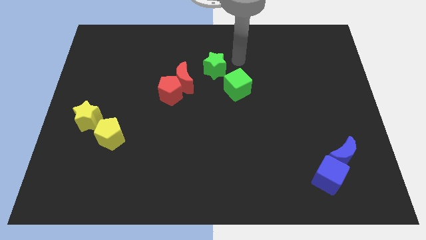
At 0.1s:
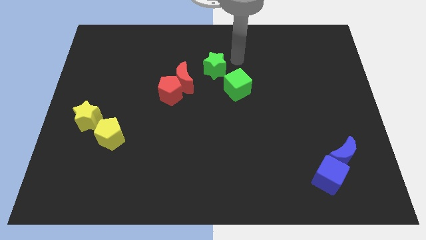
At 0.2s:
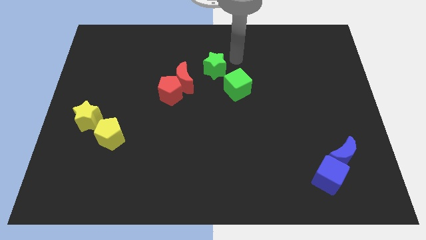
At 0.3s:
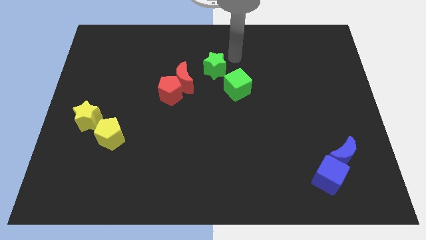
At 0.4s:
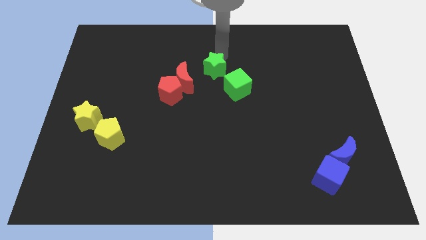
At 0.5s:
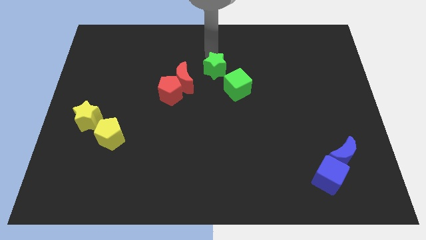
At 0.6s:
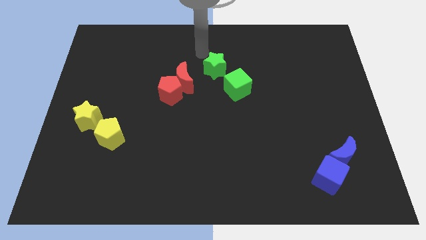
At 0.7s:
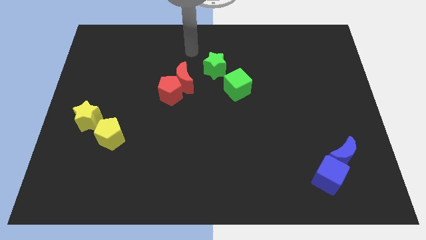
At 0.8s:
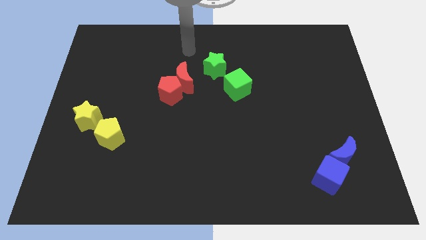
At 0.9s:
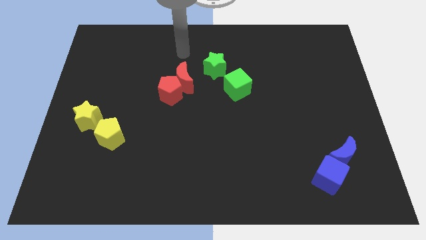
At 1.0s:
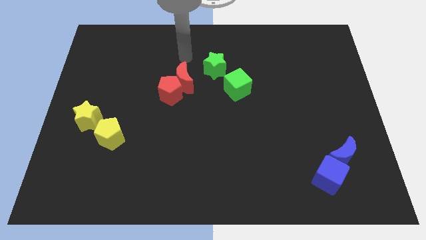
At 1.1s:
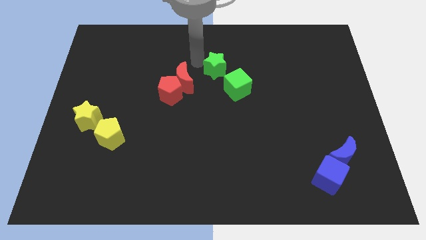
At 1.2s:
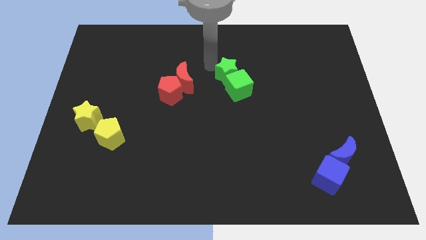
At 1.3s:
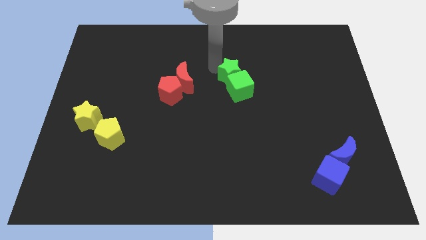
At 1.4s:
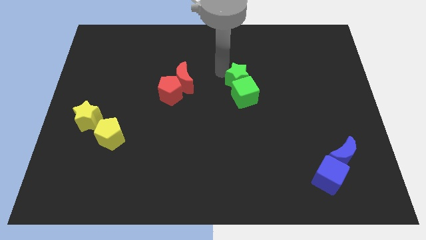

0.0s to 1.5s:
drag the green star into the top side of the green cube

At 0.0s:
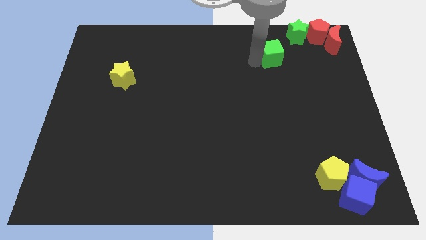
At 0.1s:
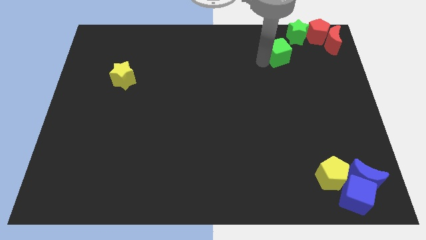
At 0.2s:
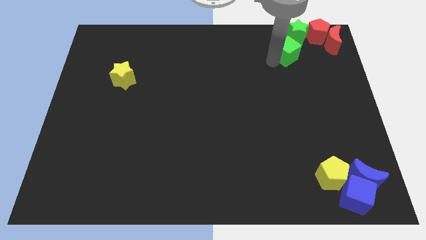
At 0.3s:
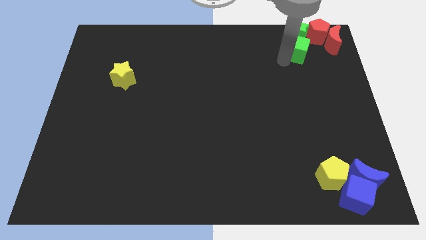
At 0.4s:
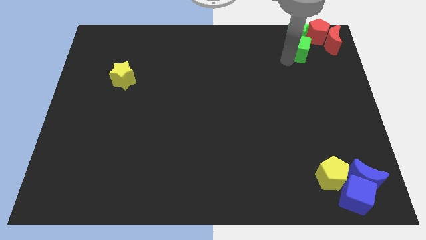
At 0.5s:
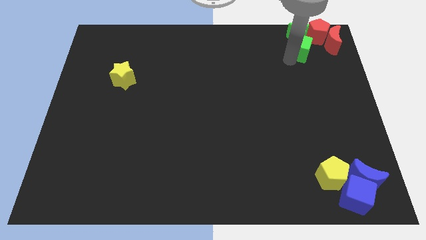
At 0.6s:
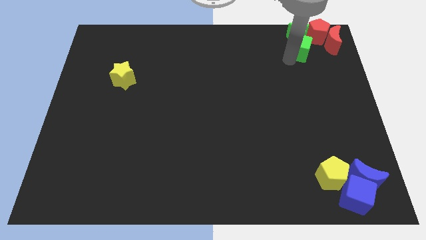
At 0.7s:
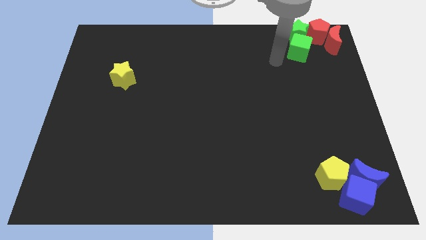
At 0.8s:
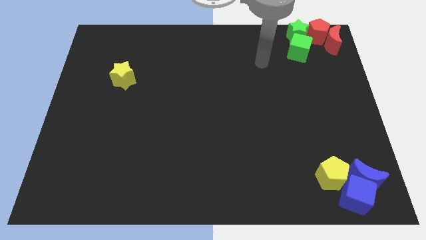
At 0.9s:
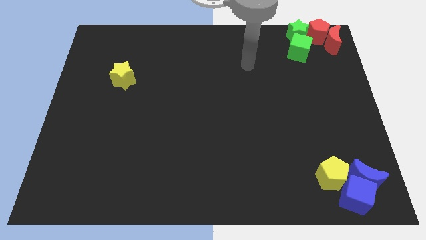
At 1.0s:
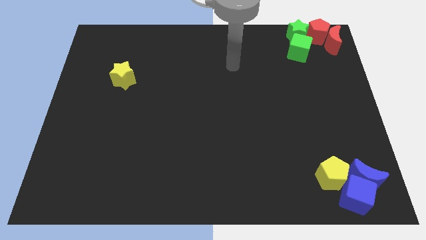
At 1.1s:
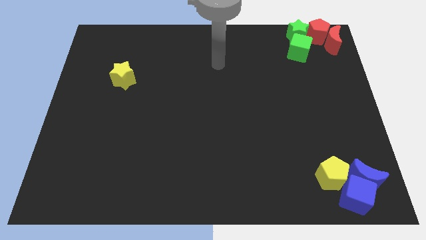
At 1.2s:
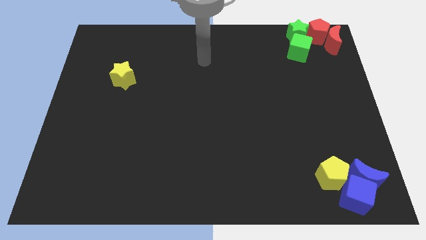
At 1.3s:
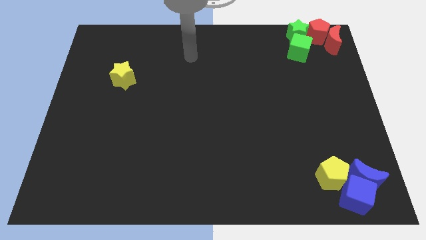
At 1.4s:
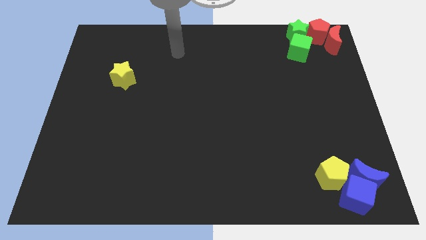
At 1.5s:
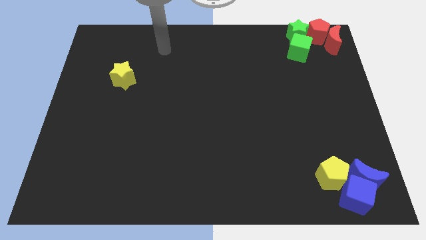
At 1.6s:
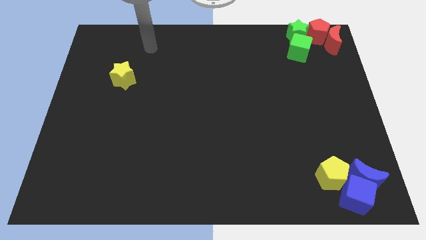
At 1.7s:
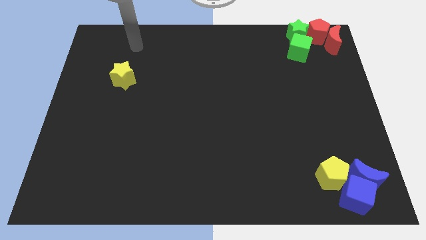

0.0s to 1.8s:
put the green cube below the green star

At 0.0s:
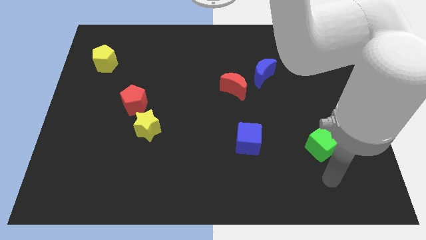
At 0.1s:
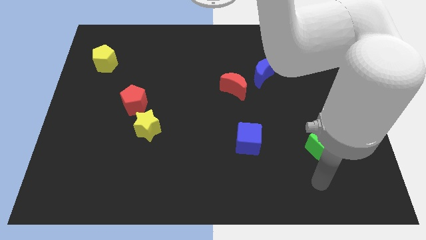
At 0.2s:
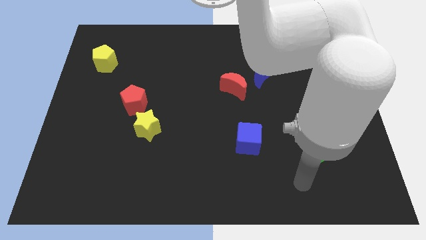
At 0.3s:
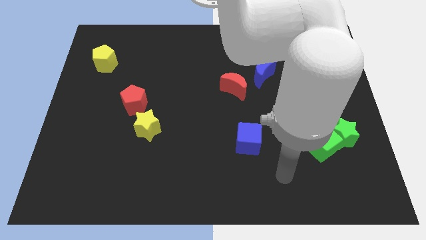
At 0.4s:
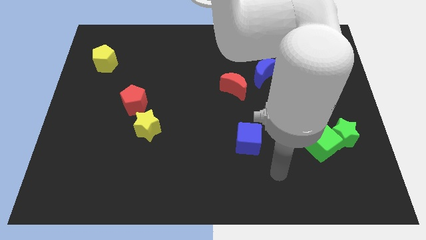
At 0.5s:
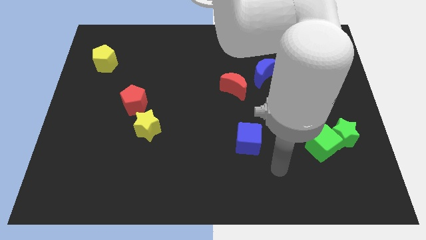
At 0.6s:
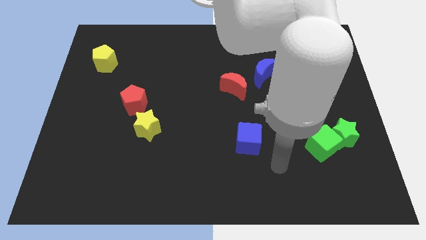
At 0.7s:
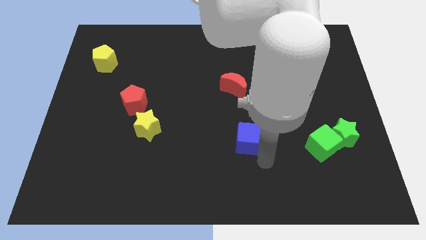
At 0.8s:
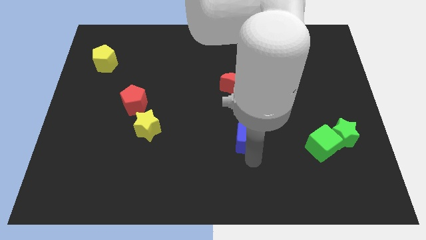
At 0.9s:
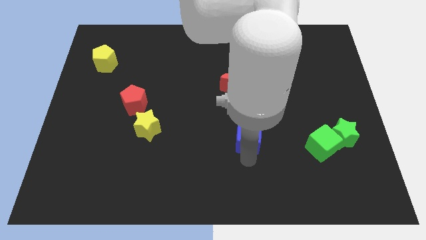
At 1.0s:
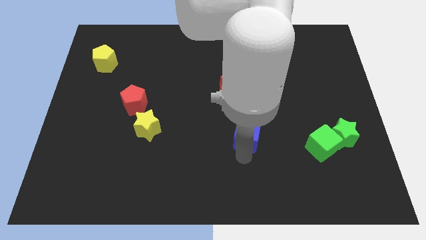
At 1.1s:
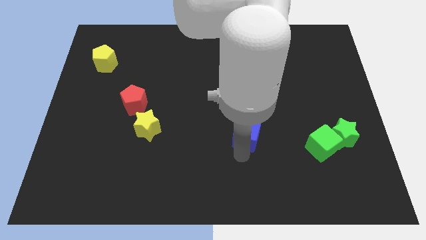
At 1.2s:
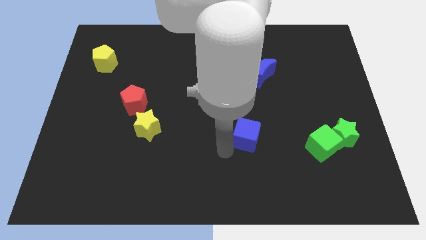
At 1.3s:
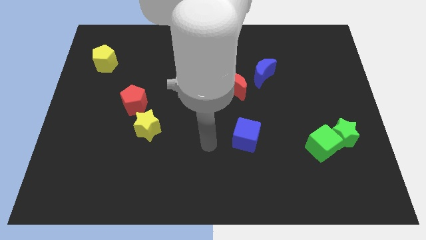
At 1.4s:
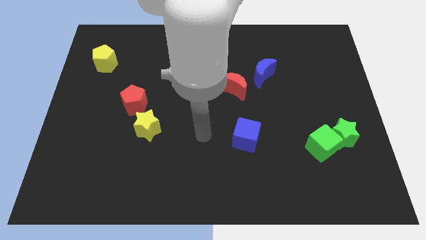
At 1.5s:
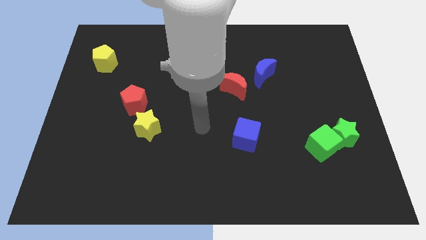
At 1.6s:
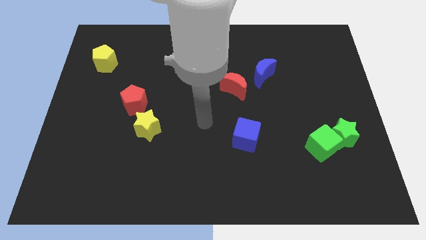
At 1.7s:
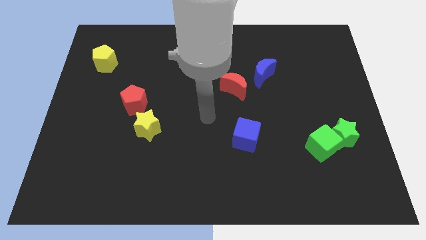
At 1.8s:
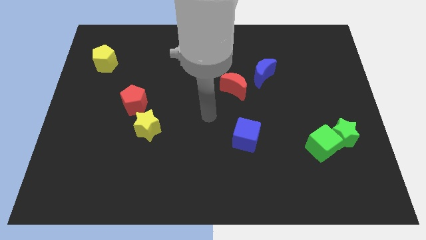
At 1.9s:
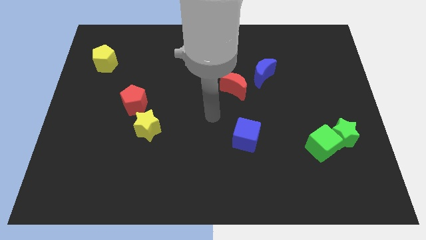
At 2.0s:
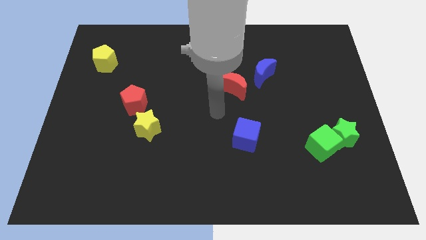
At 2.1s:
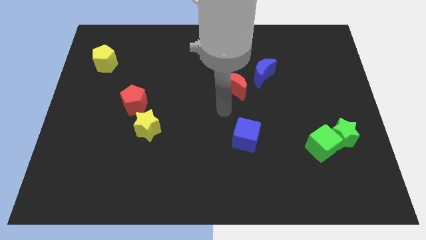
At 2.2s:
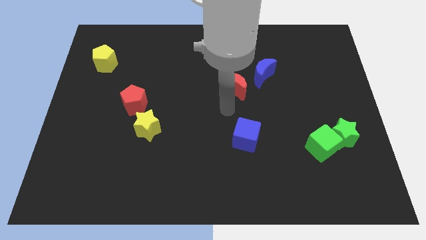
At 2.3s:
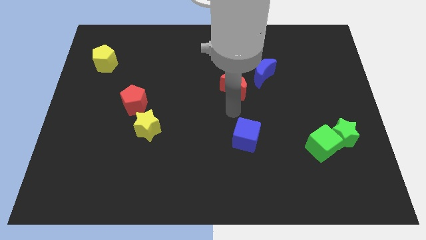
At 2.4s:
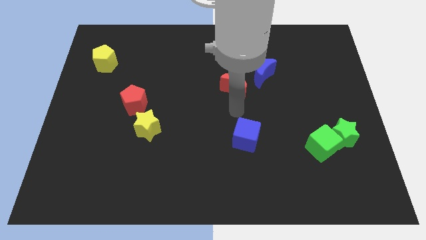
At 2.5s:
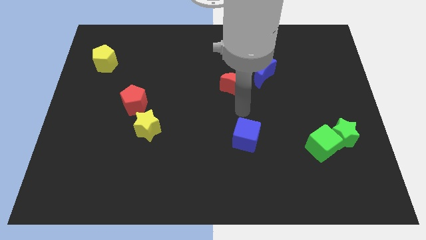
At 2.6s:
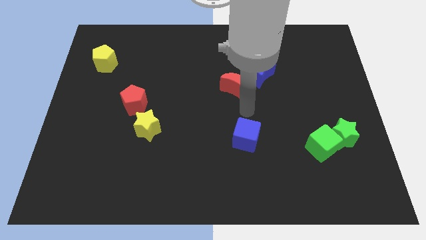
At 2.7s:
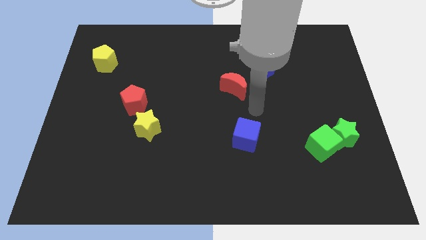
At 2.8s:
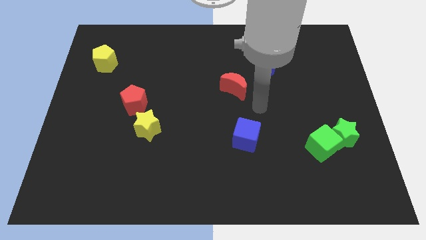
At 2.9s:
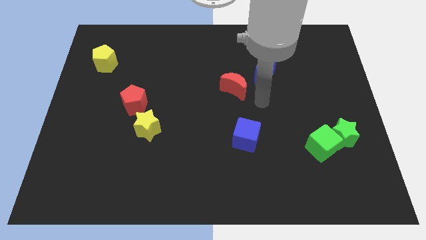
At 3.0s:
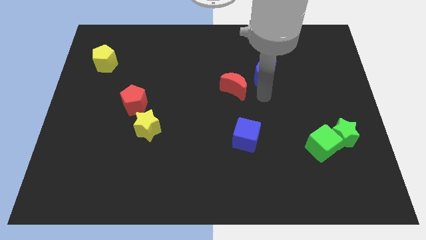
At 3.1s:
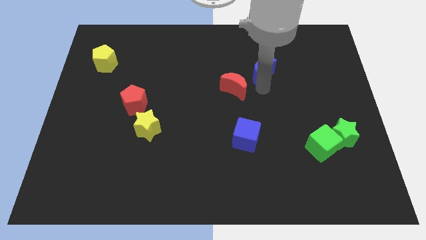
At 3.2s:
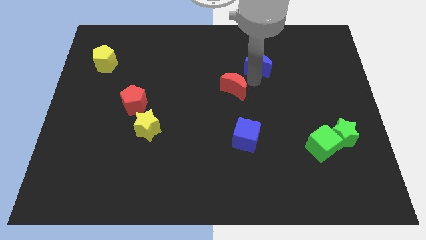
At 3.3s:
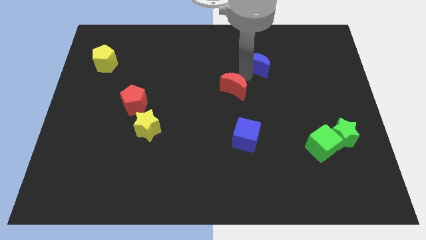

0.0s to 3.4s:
move the blue cube slightly upwards

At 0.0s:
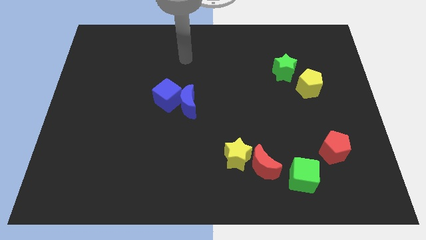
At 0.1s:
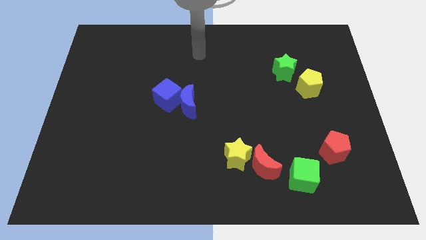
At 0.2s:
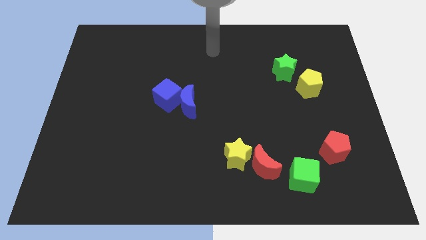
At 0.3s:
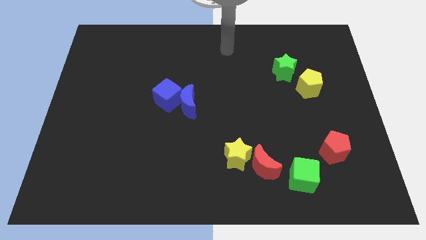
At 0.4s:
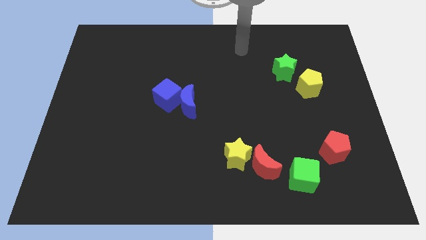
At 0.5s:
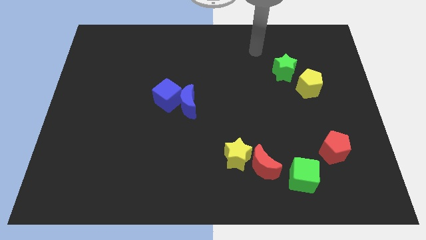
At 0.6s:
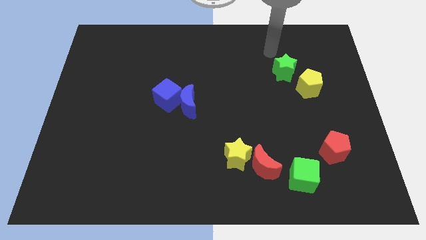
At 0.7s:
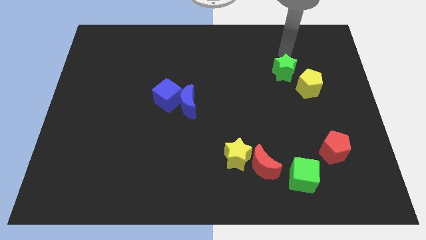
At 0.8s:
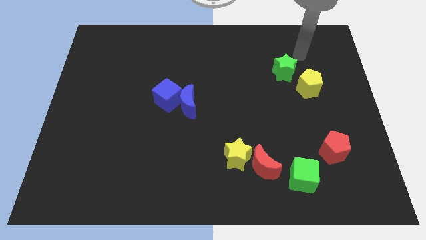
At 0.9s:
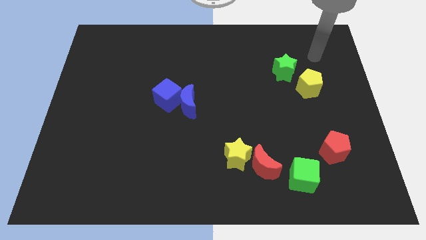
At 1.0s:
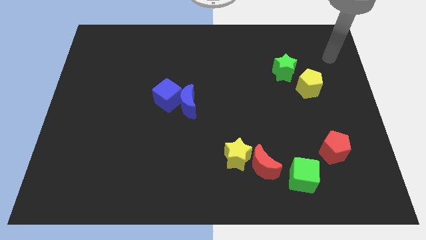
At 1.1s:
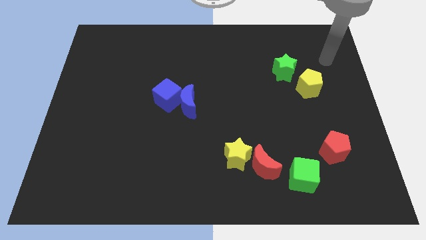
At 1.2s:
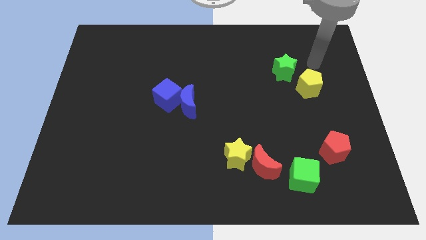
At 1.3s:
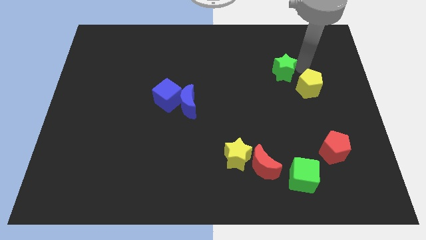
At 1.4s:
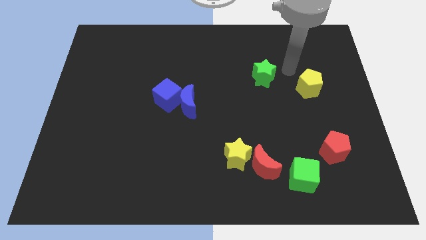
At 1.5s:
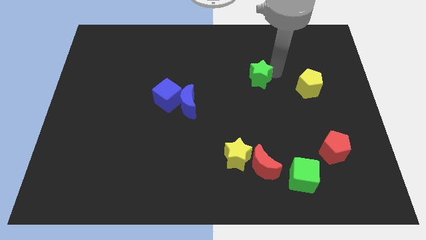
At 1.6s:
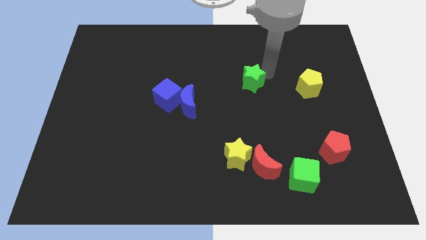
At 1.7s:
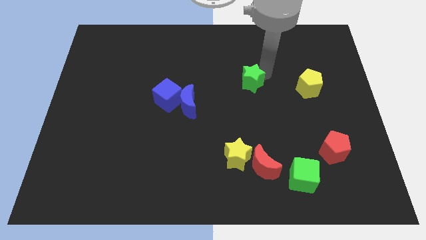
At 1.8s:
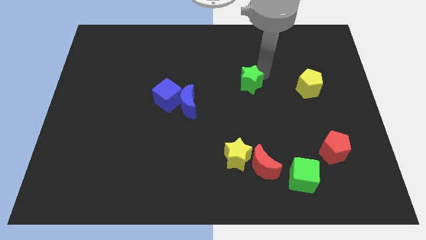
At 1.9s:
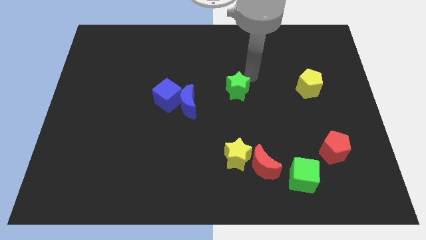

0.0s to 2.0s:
move the green star right side of the blue moon

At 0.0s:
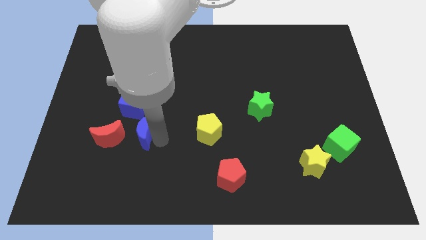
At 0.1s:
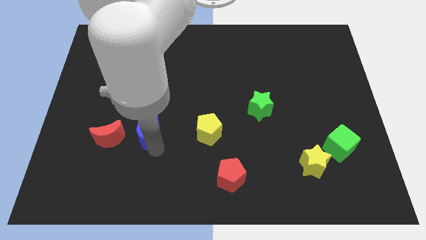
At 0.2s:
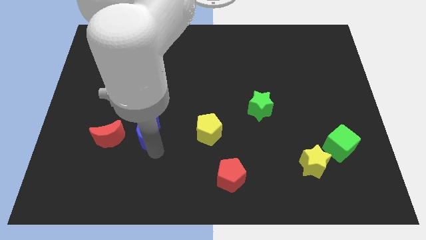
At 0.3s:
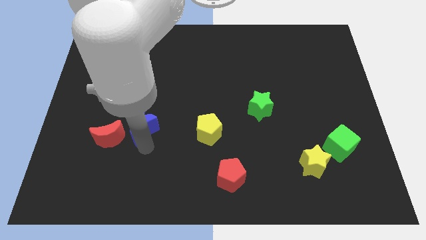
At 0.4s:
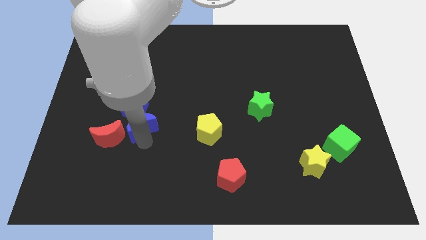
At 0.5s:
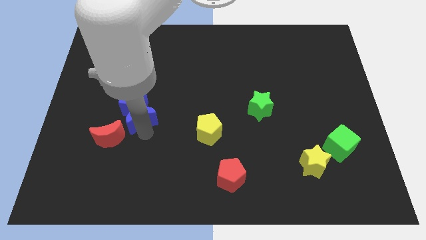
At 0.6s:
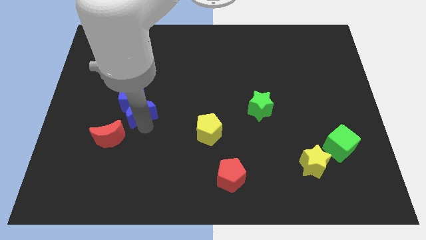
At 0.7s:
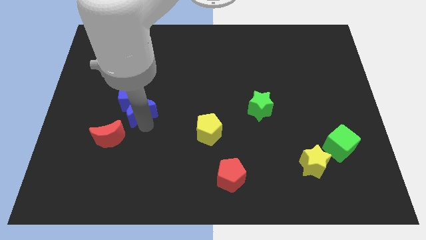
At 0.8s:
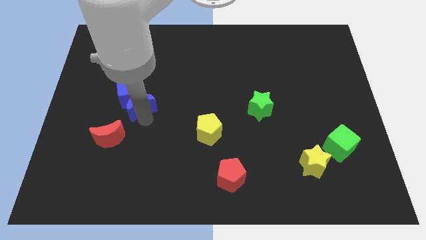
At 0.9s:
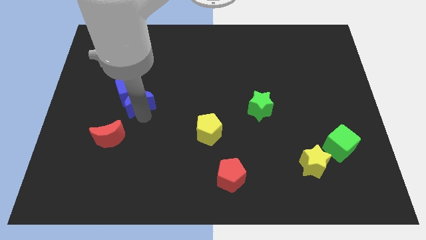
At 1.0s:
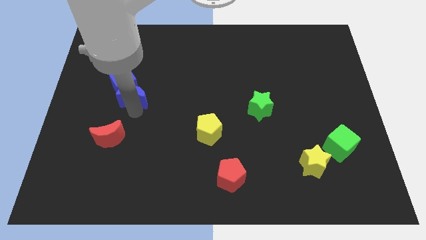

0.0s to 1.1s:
move blue moon into the blue cube
